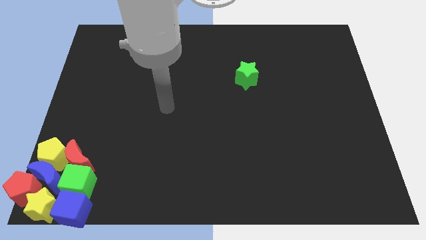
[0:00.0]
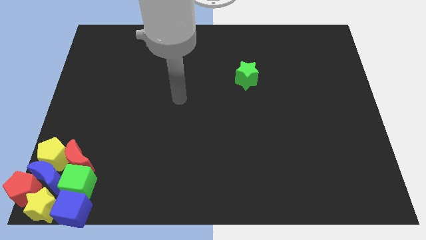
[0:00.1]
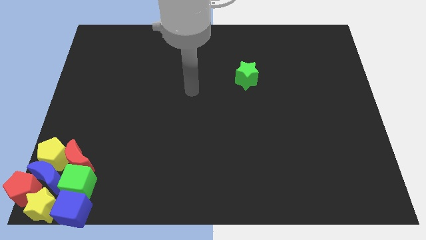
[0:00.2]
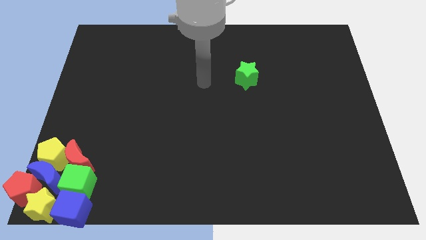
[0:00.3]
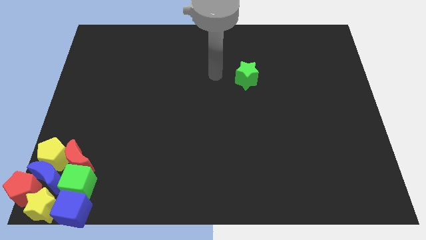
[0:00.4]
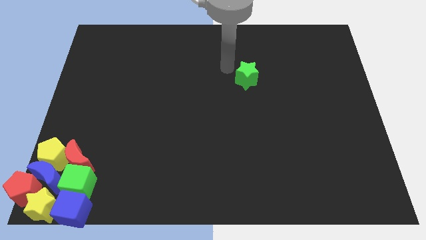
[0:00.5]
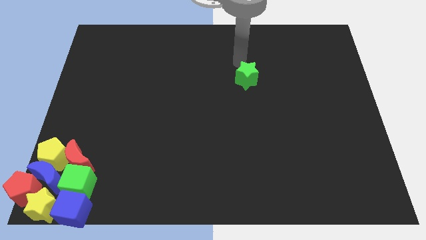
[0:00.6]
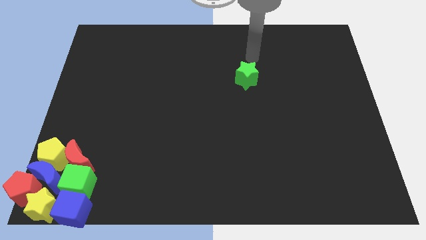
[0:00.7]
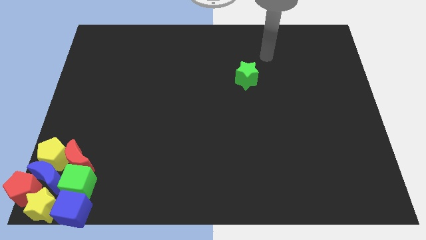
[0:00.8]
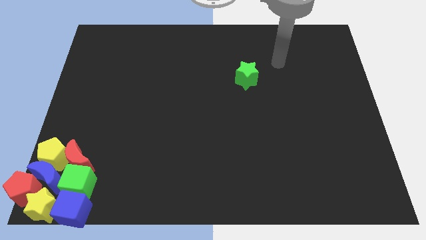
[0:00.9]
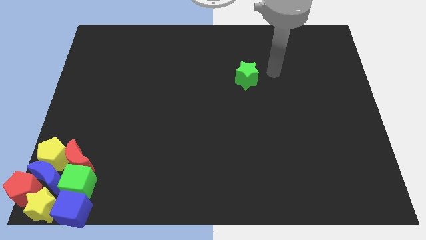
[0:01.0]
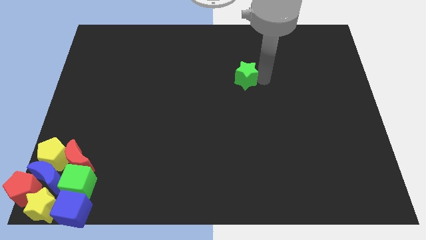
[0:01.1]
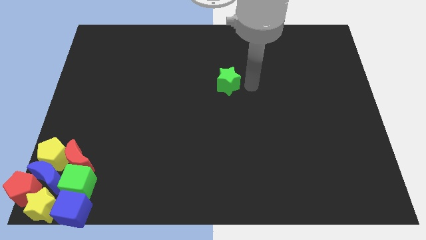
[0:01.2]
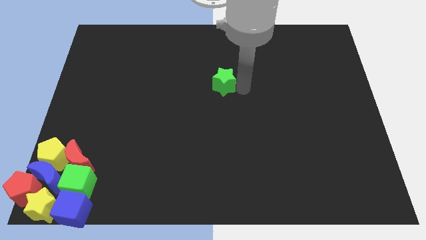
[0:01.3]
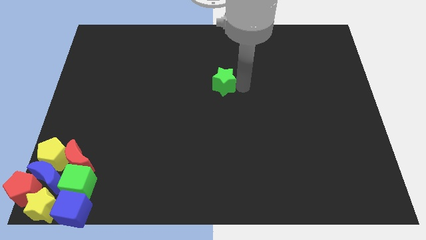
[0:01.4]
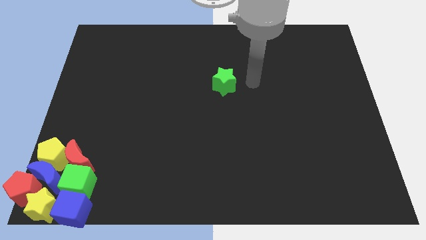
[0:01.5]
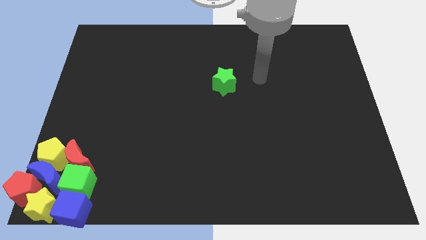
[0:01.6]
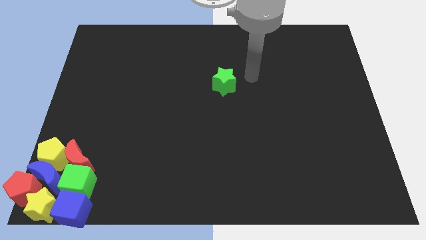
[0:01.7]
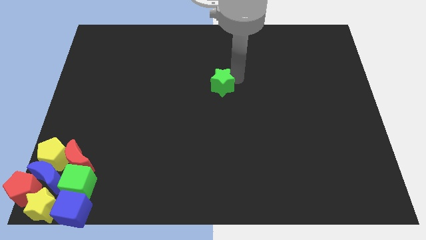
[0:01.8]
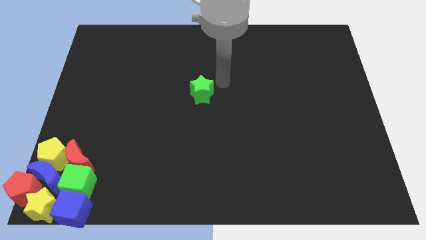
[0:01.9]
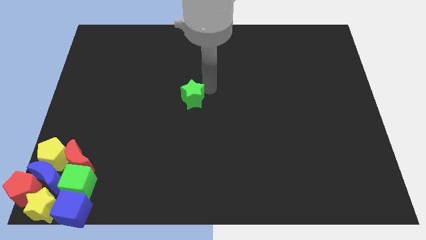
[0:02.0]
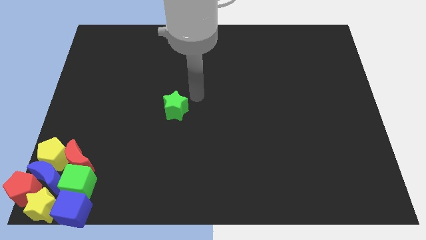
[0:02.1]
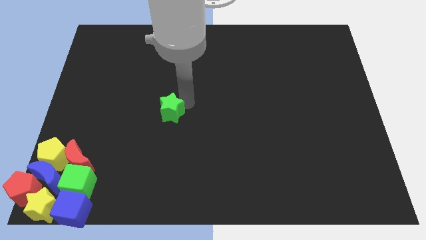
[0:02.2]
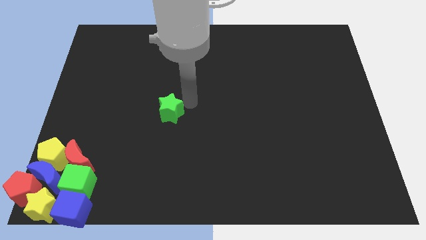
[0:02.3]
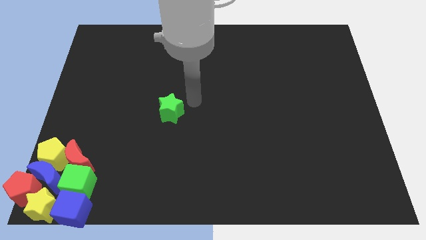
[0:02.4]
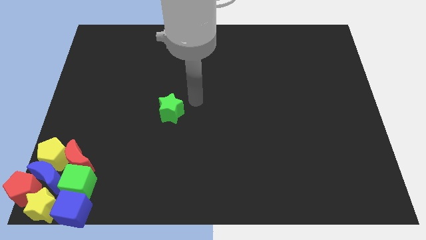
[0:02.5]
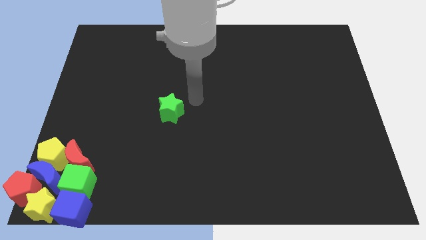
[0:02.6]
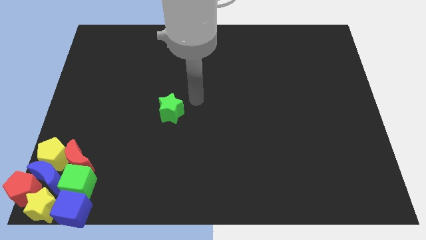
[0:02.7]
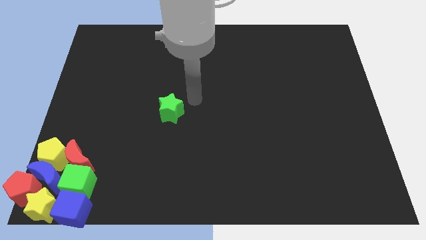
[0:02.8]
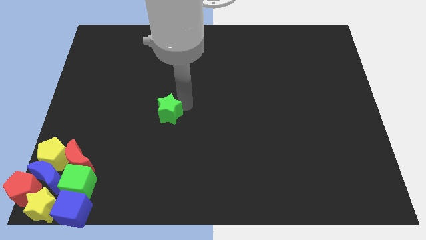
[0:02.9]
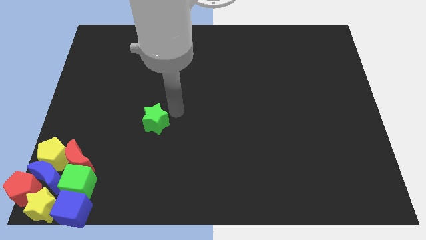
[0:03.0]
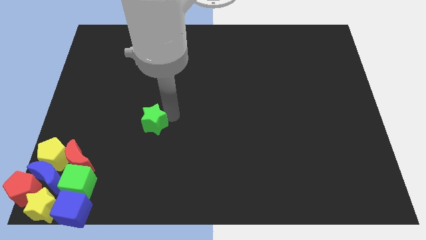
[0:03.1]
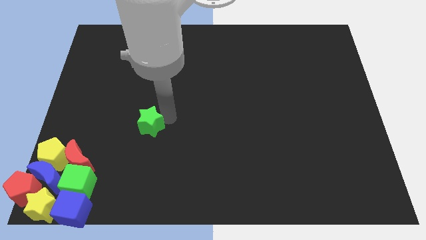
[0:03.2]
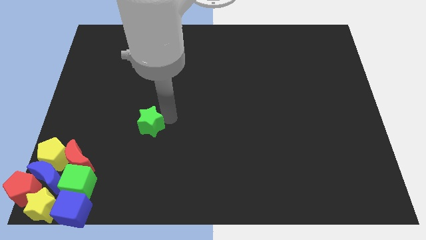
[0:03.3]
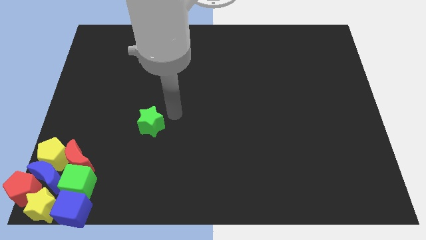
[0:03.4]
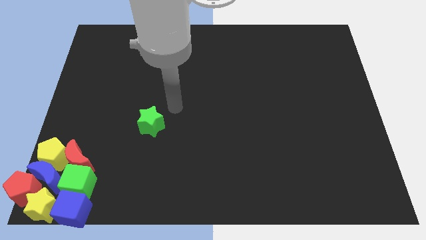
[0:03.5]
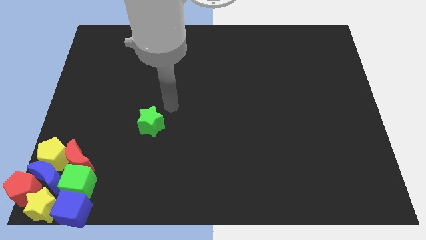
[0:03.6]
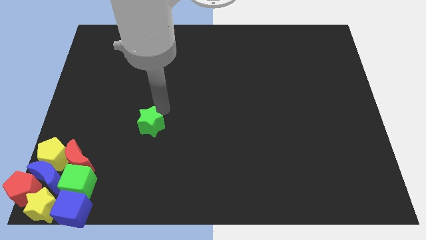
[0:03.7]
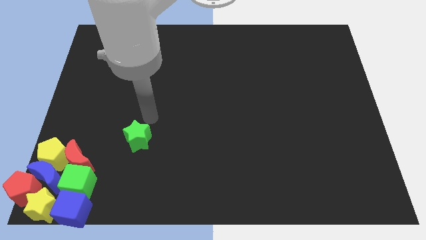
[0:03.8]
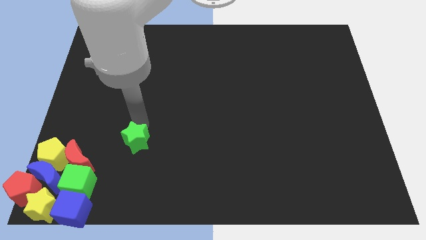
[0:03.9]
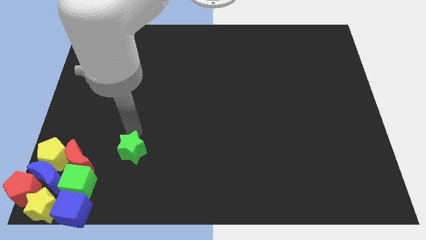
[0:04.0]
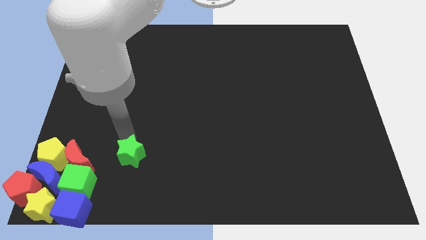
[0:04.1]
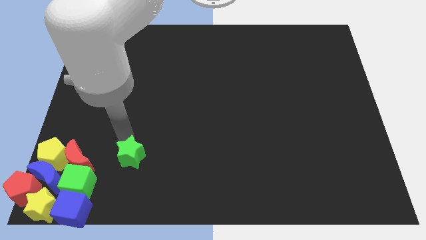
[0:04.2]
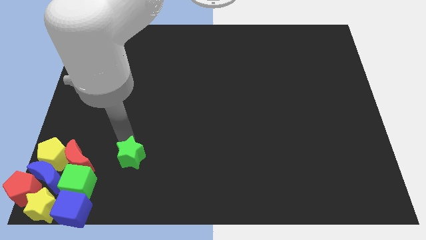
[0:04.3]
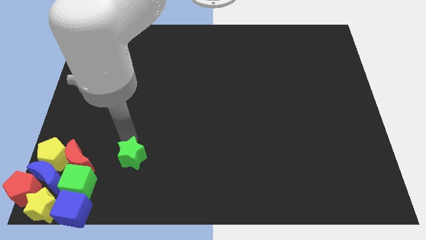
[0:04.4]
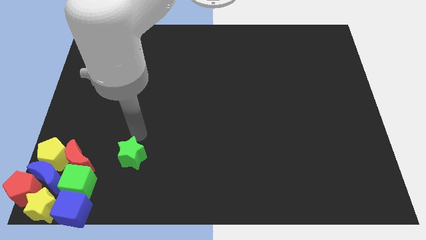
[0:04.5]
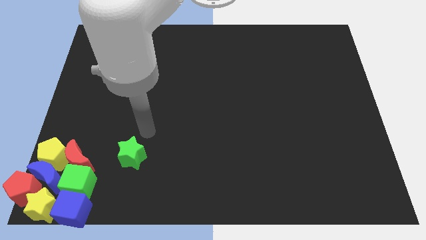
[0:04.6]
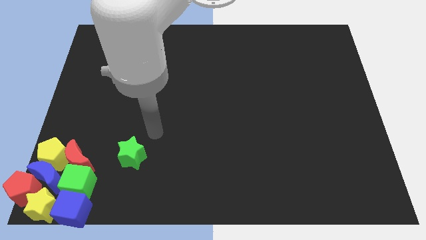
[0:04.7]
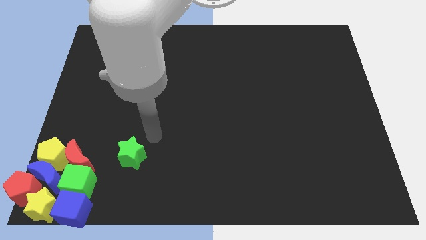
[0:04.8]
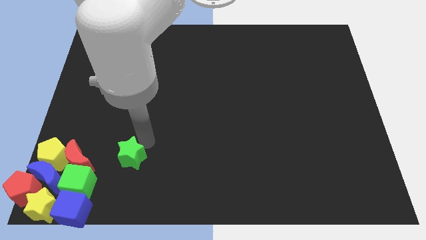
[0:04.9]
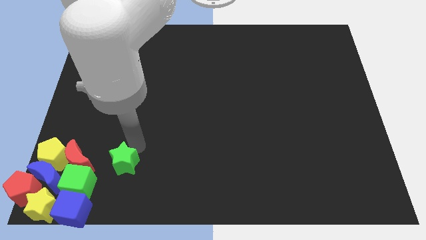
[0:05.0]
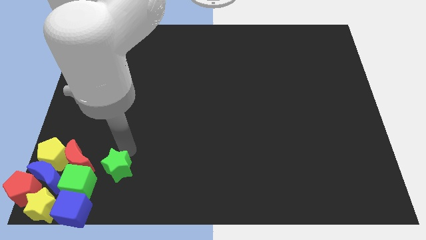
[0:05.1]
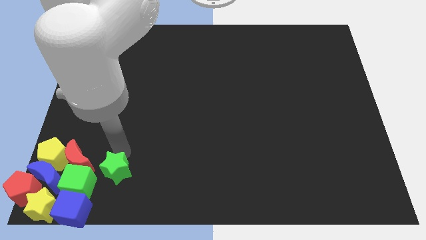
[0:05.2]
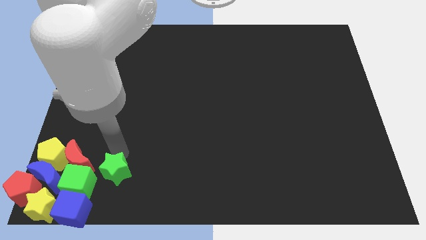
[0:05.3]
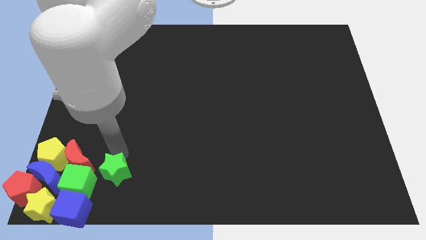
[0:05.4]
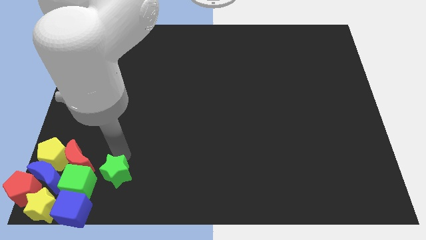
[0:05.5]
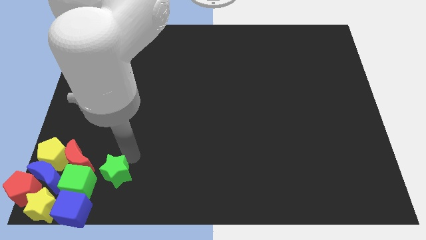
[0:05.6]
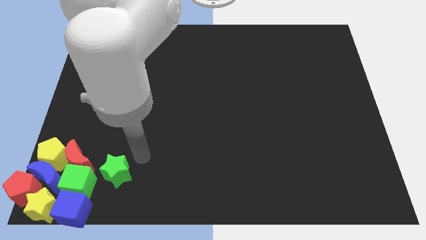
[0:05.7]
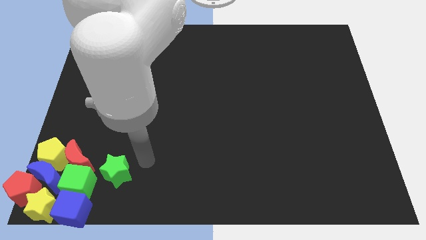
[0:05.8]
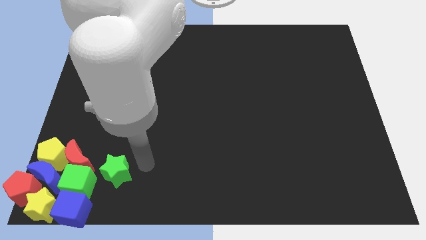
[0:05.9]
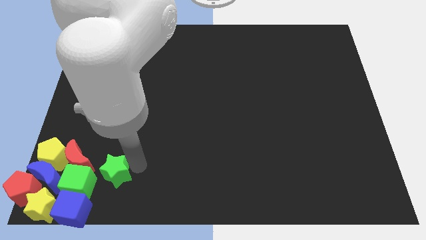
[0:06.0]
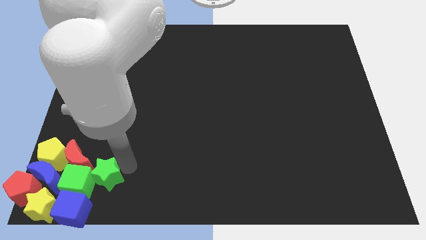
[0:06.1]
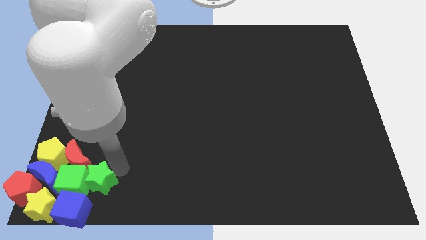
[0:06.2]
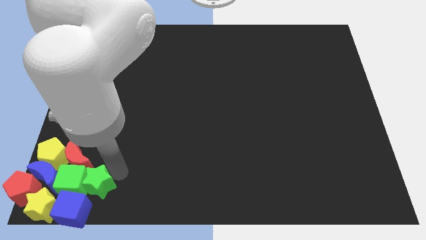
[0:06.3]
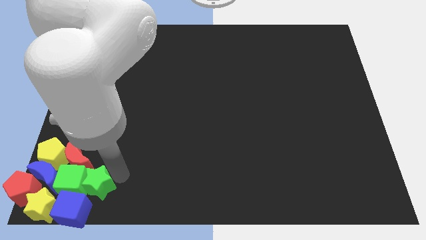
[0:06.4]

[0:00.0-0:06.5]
push the green star into the right side of the green cube

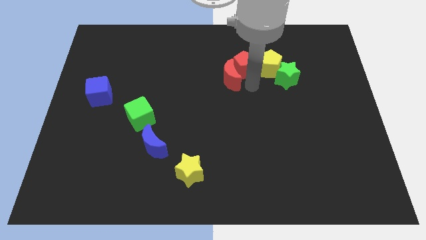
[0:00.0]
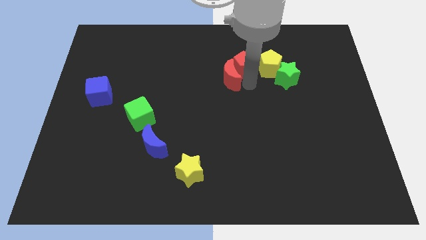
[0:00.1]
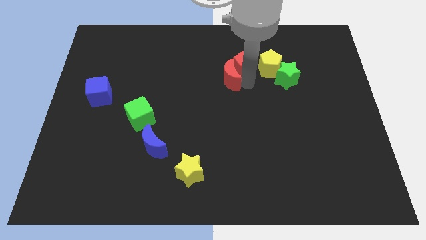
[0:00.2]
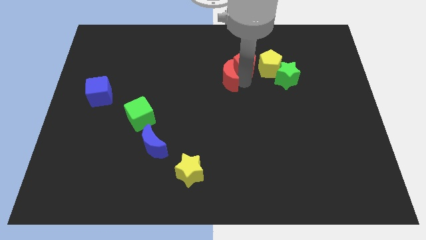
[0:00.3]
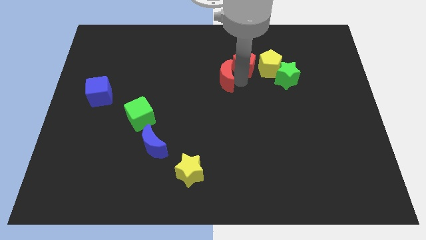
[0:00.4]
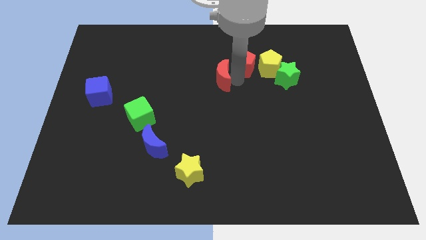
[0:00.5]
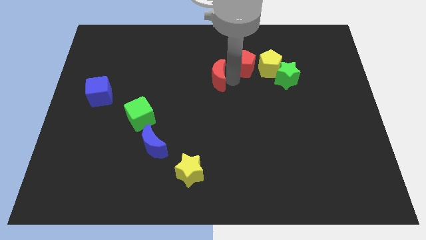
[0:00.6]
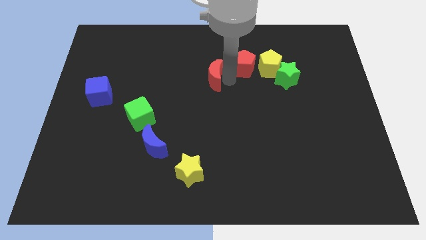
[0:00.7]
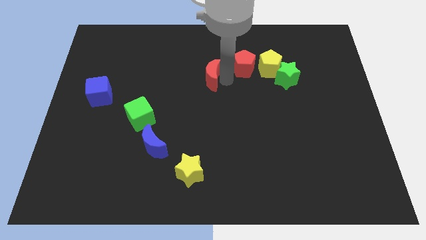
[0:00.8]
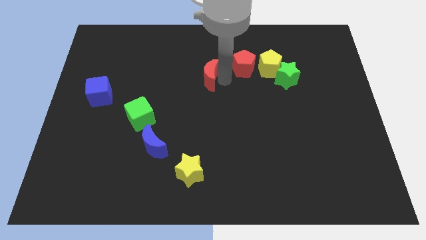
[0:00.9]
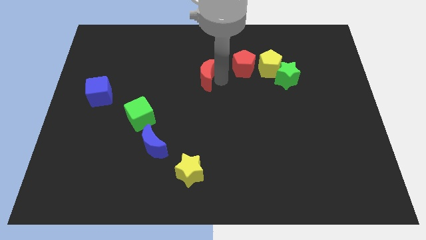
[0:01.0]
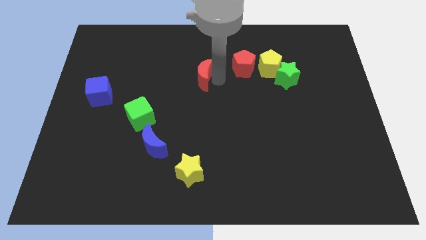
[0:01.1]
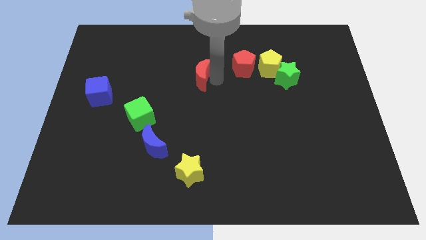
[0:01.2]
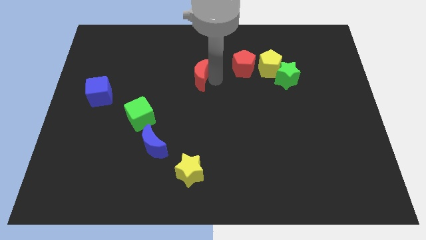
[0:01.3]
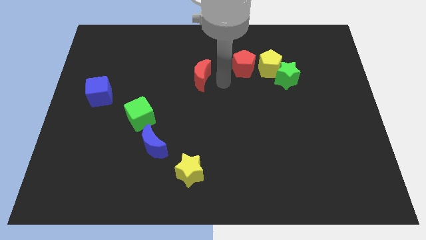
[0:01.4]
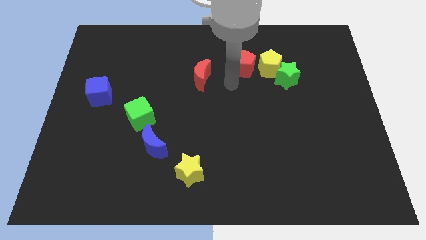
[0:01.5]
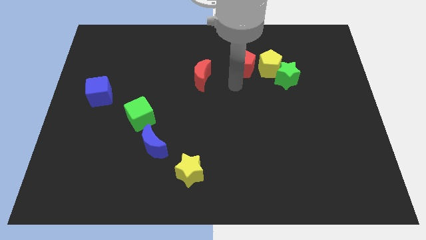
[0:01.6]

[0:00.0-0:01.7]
separate red crescent from red pentagon

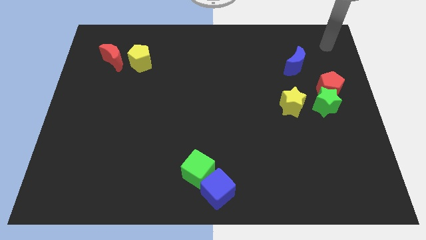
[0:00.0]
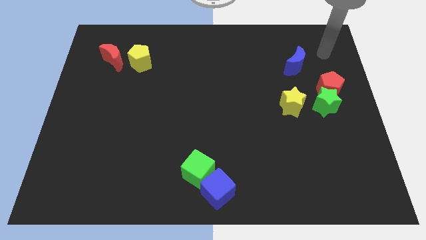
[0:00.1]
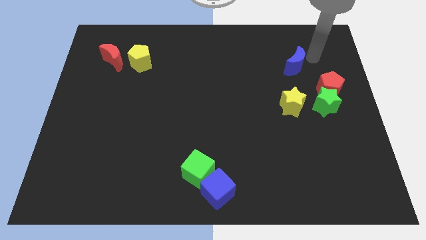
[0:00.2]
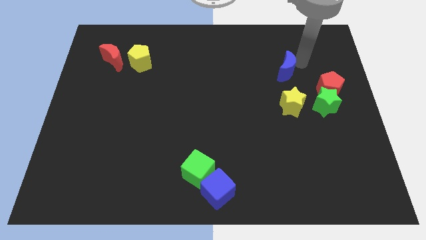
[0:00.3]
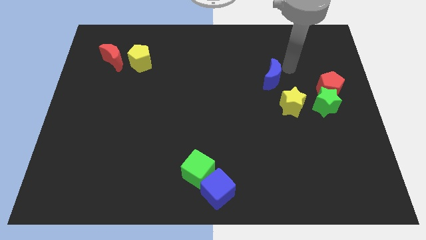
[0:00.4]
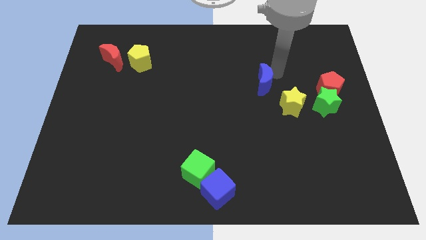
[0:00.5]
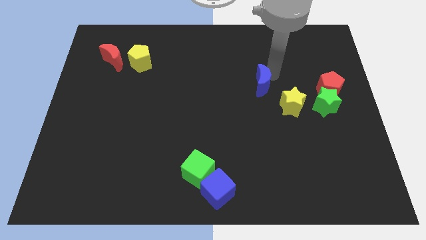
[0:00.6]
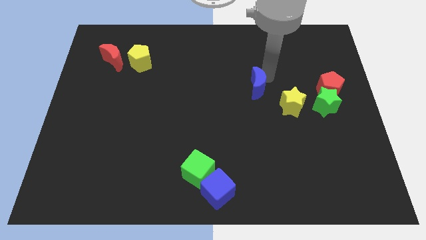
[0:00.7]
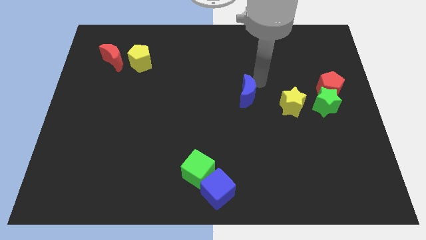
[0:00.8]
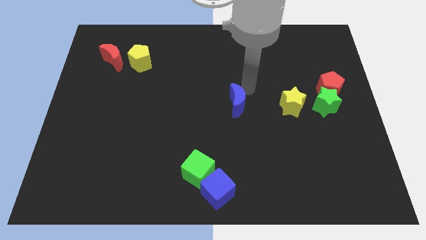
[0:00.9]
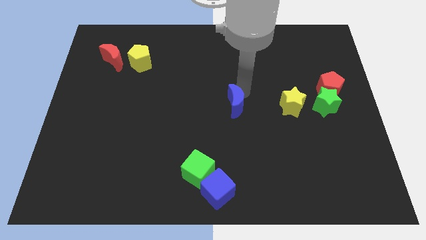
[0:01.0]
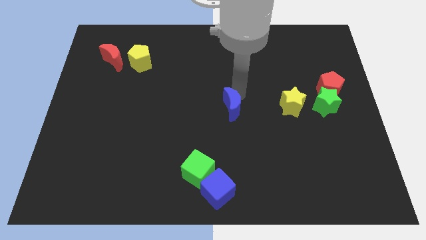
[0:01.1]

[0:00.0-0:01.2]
move the blue crescent parallel to the yellow star
